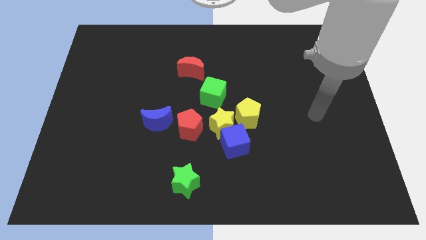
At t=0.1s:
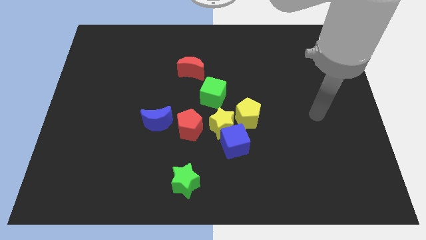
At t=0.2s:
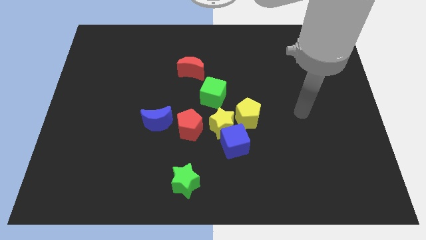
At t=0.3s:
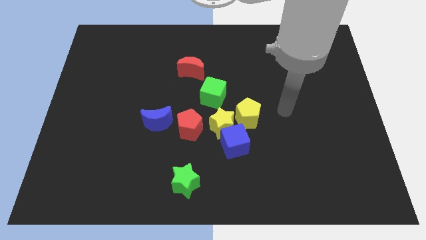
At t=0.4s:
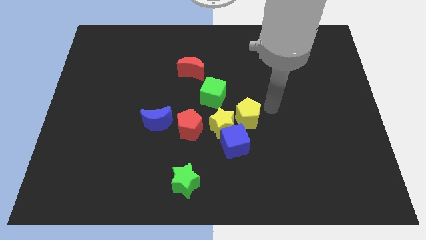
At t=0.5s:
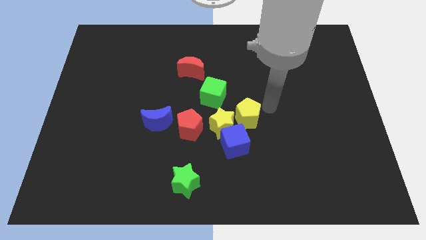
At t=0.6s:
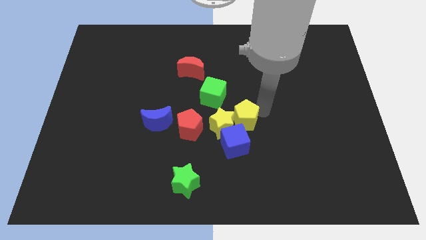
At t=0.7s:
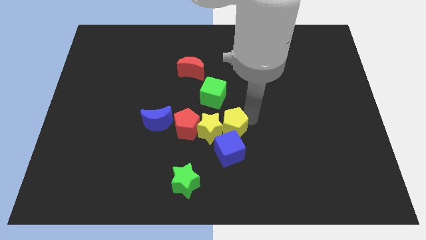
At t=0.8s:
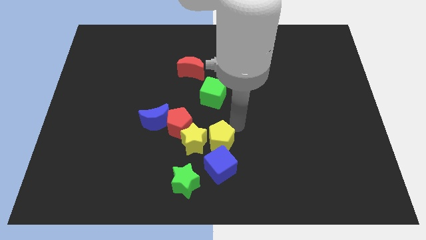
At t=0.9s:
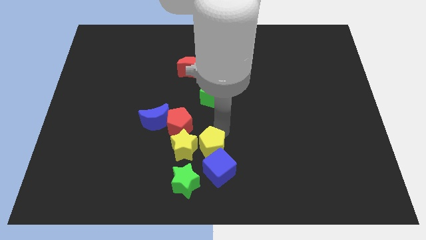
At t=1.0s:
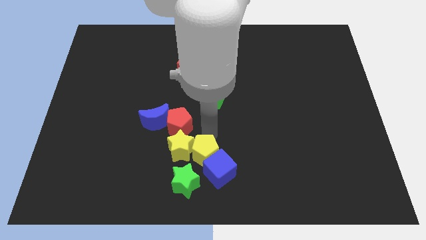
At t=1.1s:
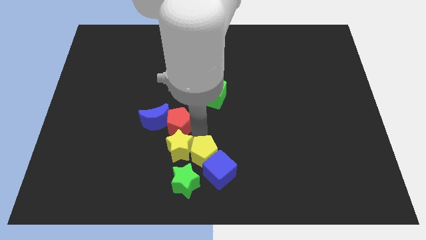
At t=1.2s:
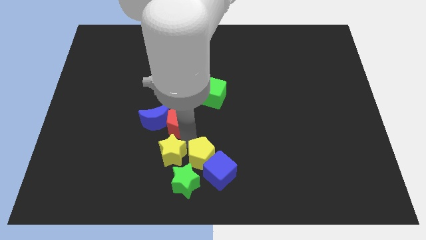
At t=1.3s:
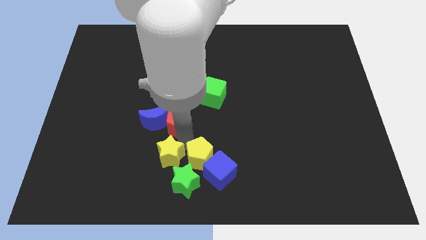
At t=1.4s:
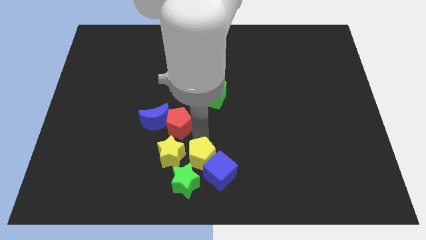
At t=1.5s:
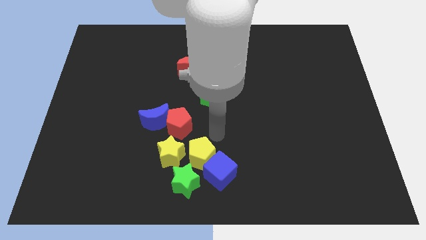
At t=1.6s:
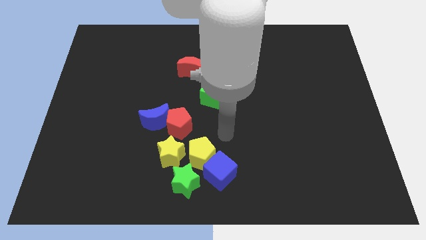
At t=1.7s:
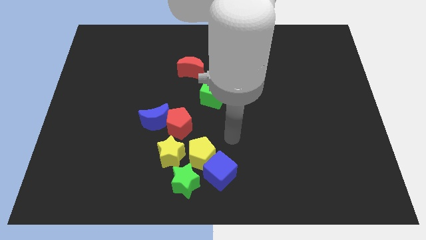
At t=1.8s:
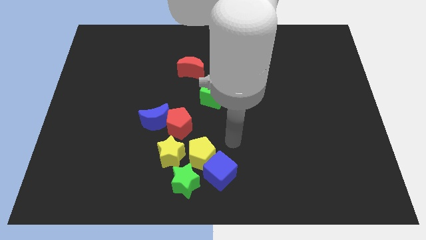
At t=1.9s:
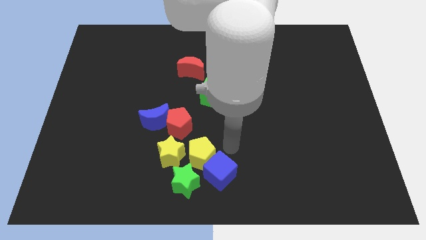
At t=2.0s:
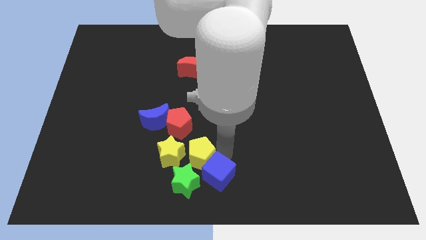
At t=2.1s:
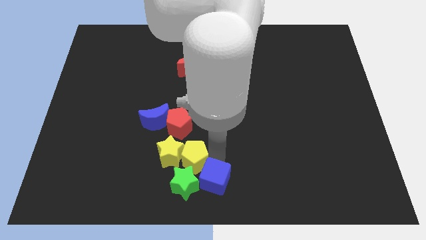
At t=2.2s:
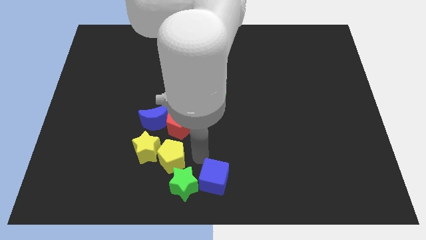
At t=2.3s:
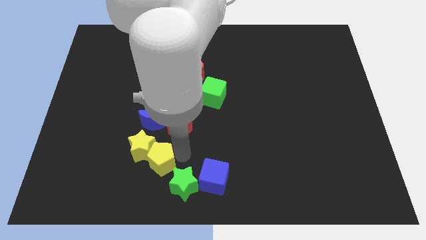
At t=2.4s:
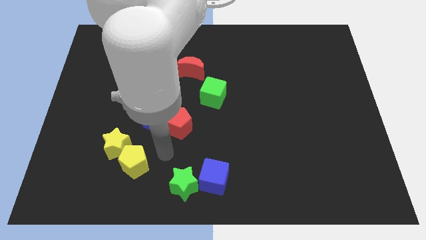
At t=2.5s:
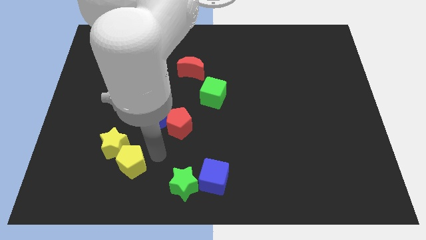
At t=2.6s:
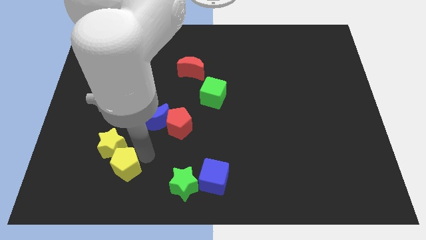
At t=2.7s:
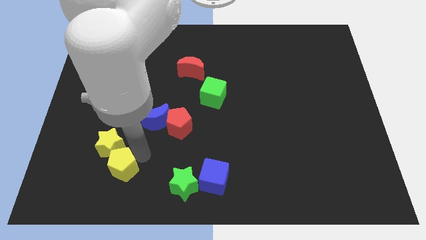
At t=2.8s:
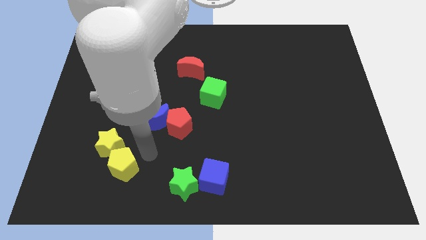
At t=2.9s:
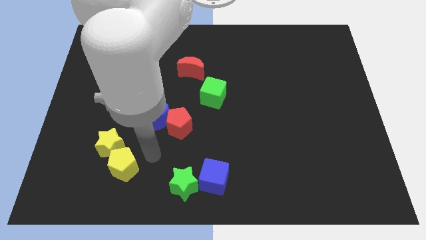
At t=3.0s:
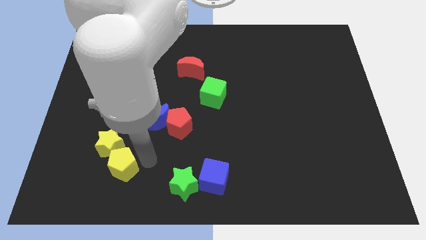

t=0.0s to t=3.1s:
slide the yellow blocks to the bottom left of the blue moon

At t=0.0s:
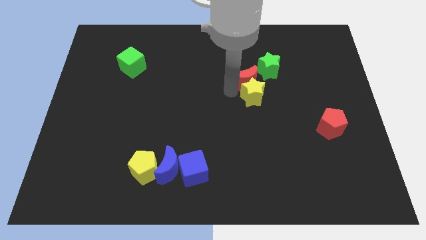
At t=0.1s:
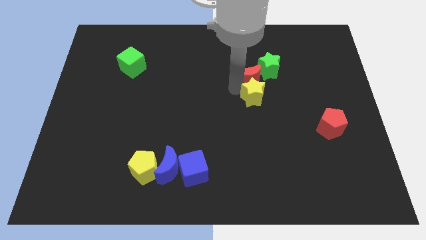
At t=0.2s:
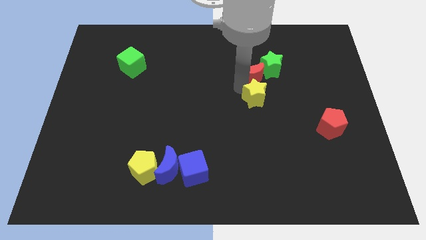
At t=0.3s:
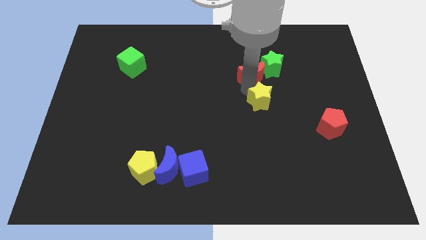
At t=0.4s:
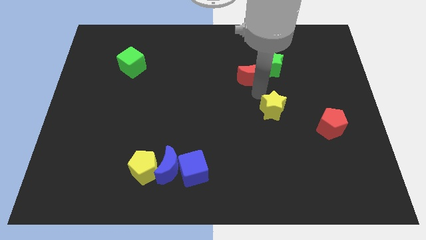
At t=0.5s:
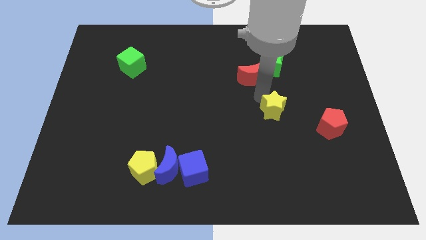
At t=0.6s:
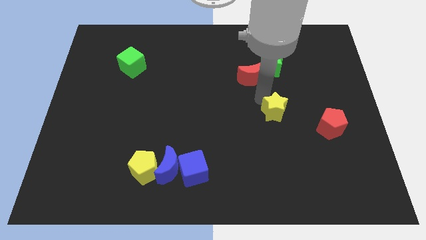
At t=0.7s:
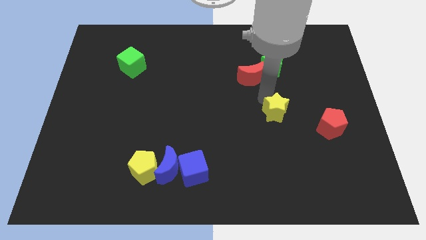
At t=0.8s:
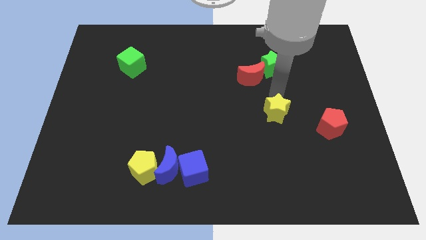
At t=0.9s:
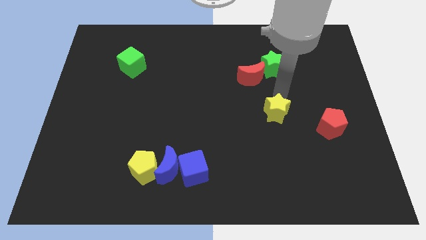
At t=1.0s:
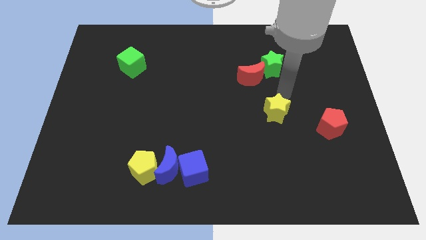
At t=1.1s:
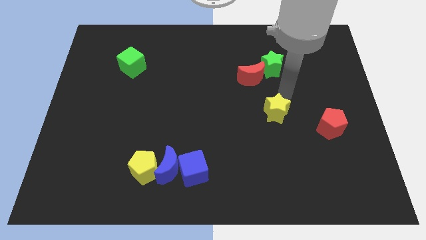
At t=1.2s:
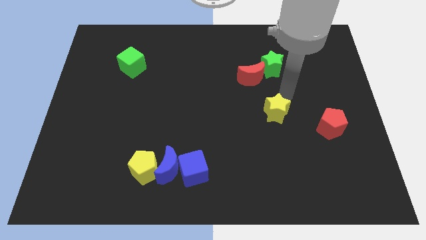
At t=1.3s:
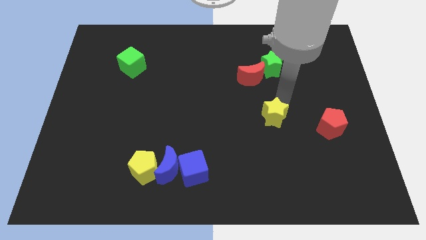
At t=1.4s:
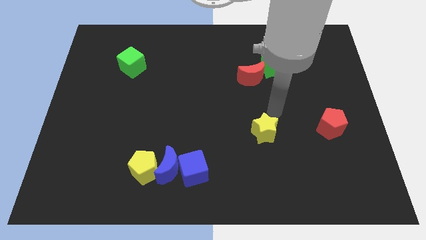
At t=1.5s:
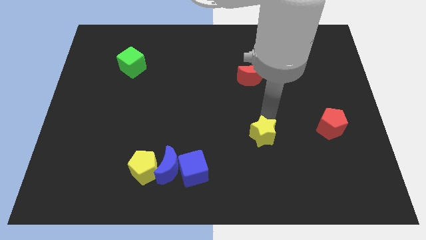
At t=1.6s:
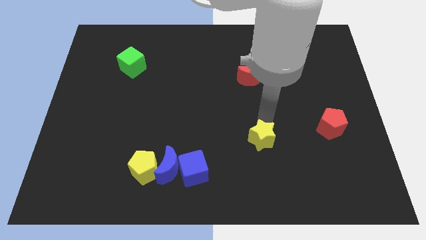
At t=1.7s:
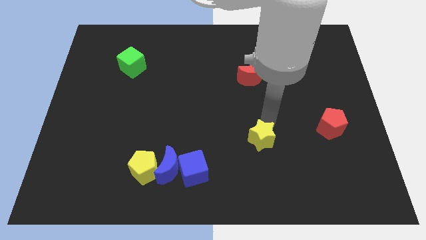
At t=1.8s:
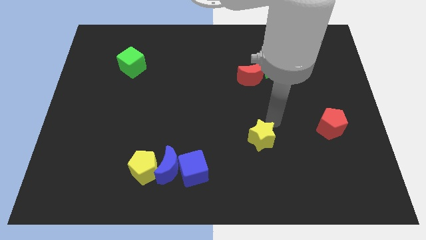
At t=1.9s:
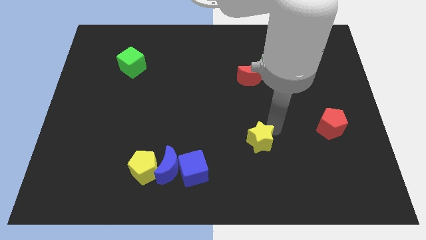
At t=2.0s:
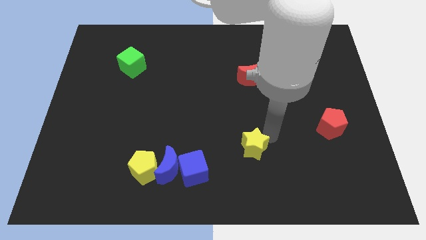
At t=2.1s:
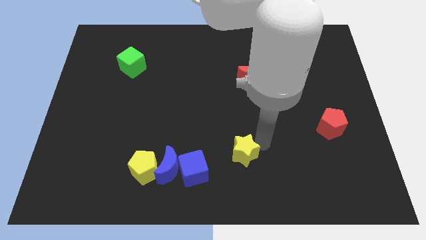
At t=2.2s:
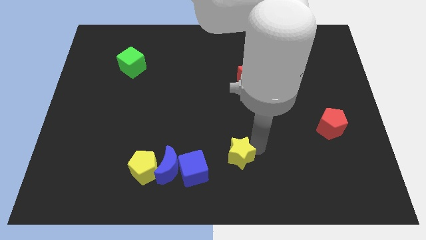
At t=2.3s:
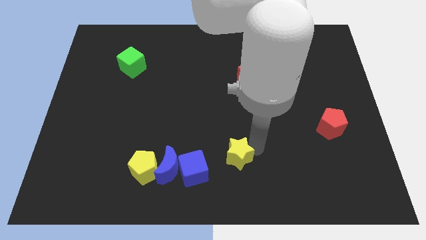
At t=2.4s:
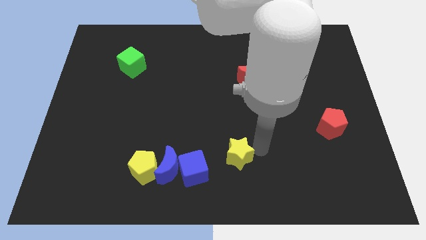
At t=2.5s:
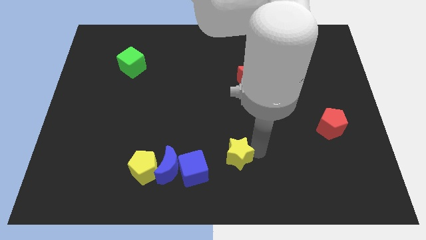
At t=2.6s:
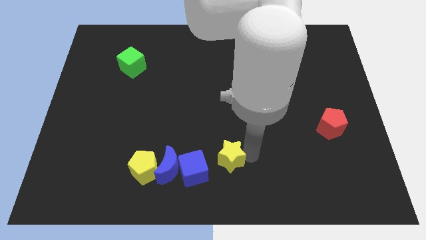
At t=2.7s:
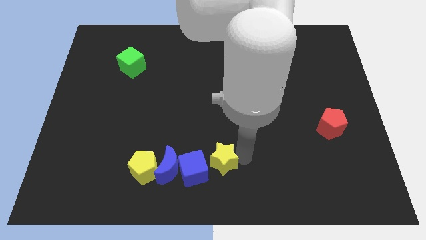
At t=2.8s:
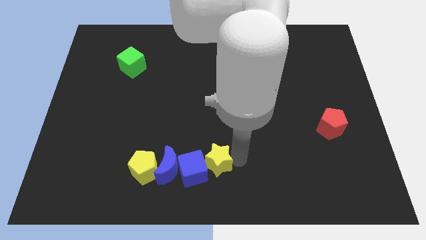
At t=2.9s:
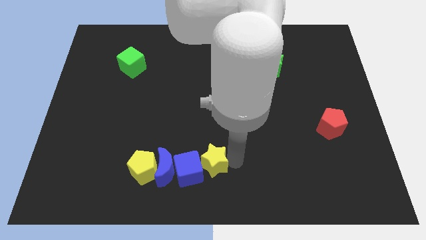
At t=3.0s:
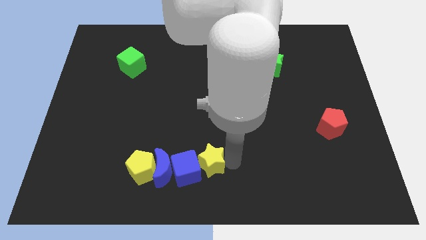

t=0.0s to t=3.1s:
move yellow star middle of the board

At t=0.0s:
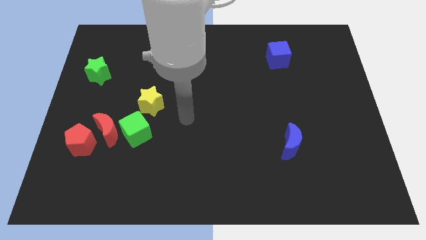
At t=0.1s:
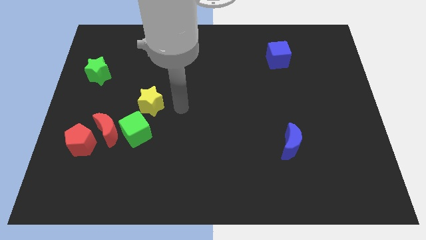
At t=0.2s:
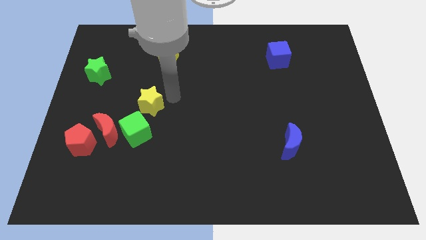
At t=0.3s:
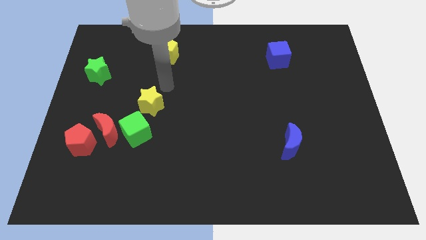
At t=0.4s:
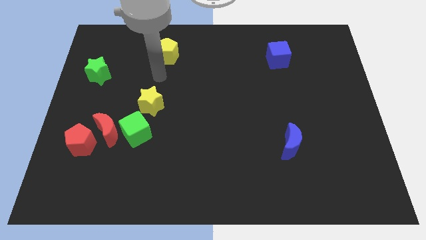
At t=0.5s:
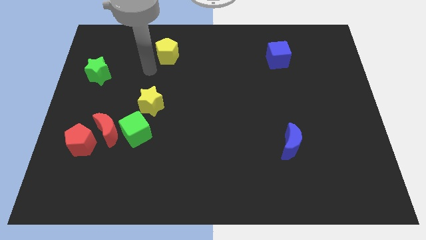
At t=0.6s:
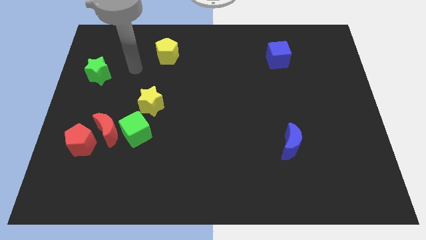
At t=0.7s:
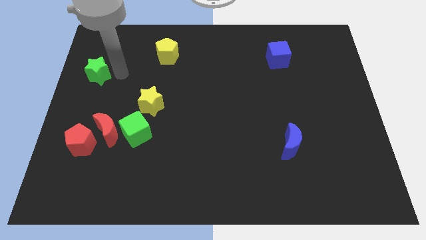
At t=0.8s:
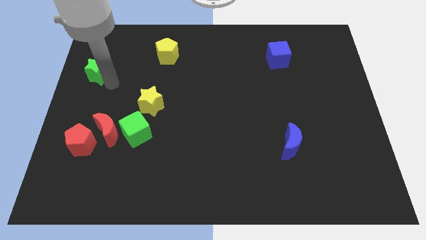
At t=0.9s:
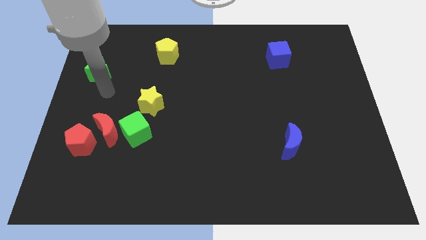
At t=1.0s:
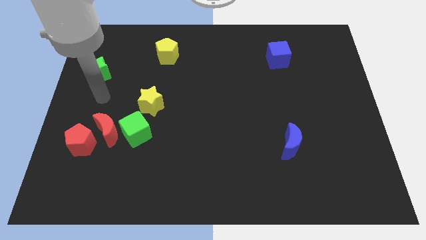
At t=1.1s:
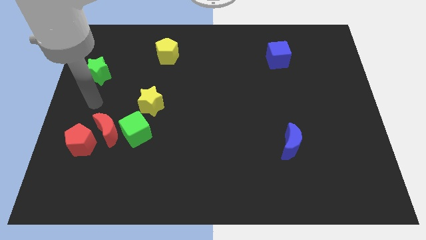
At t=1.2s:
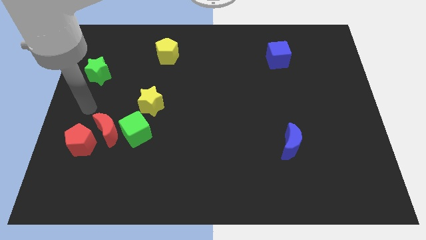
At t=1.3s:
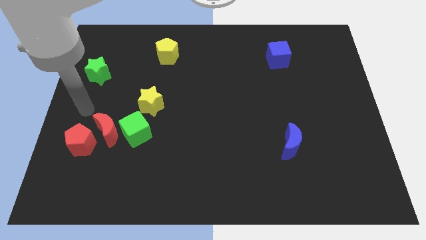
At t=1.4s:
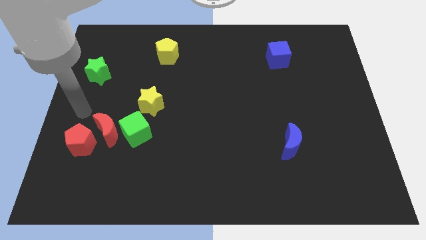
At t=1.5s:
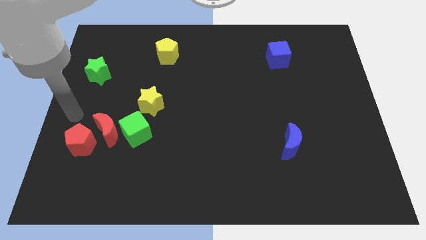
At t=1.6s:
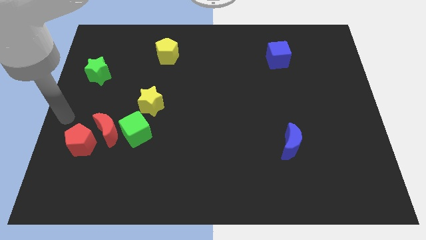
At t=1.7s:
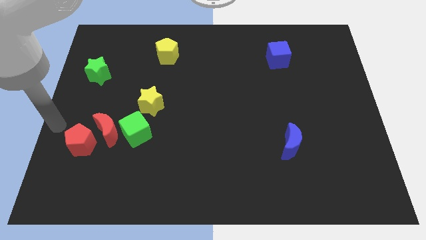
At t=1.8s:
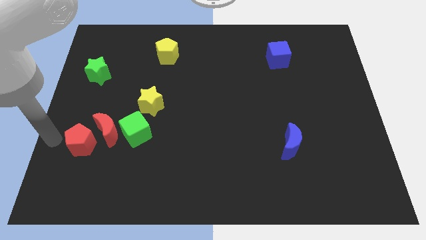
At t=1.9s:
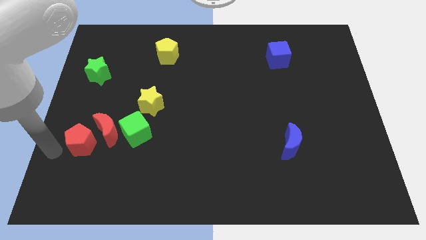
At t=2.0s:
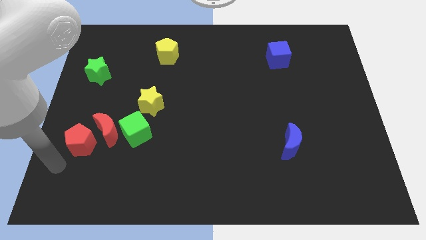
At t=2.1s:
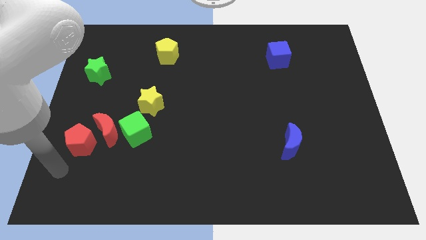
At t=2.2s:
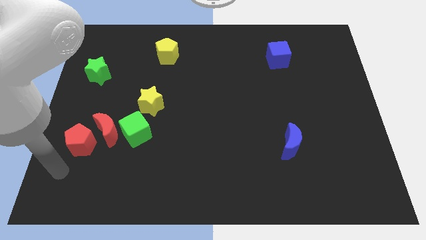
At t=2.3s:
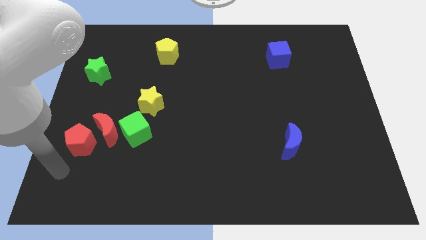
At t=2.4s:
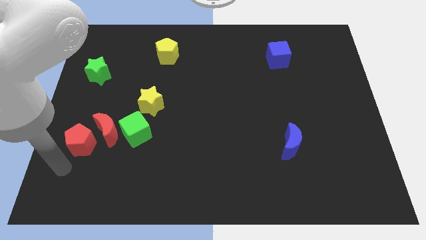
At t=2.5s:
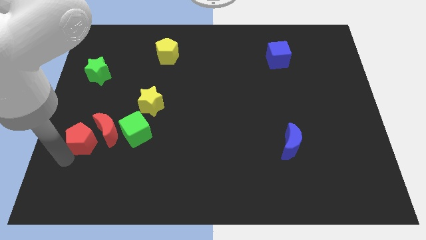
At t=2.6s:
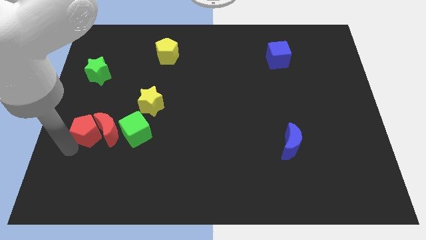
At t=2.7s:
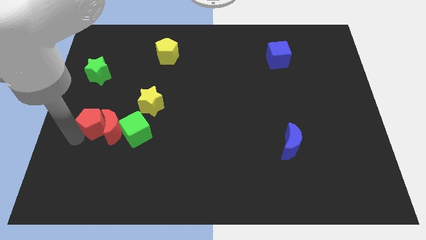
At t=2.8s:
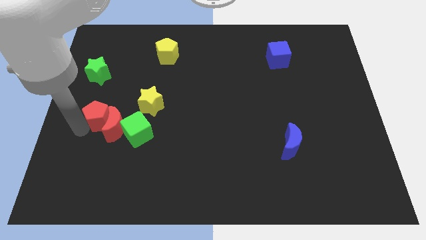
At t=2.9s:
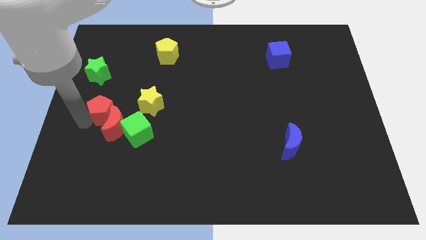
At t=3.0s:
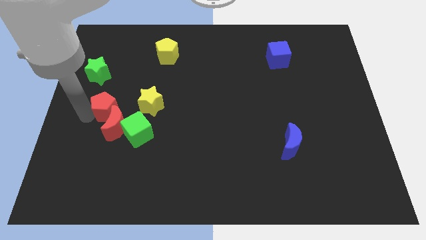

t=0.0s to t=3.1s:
push red pentagon towards green star
